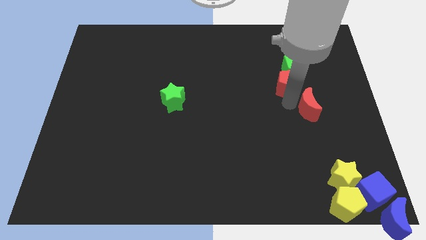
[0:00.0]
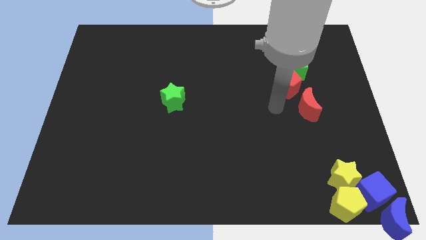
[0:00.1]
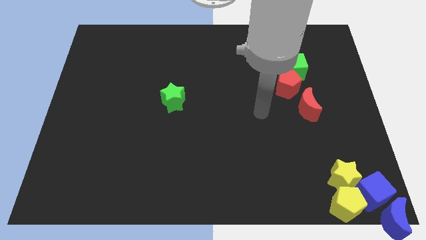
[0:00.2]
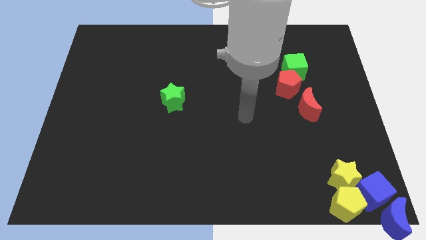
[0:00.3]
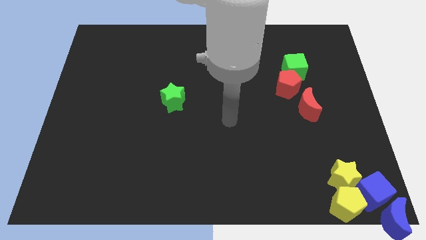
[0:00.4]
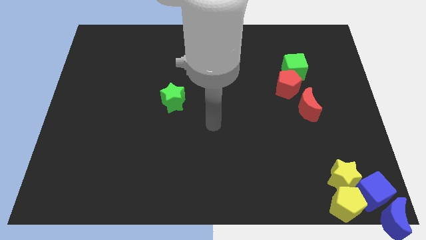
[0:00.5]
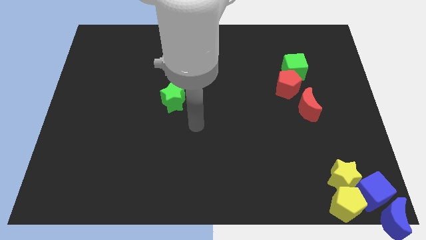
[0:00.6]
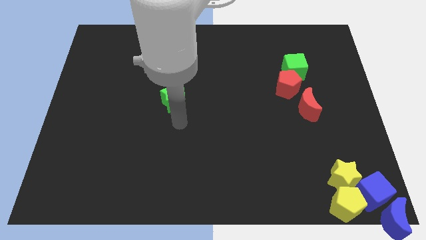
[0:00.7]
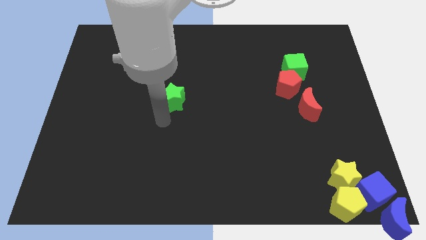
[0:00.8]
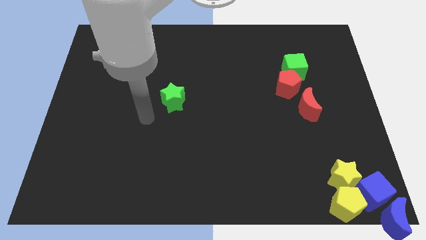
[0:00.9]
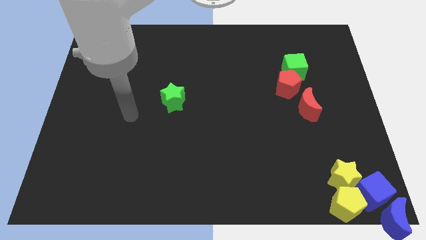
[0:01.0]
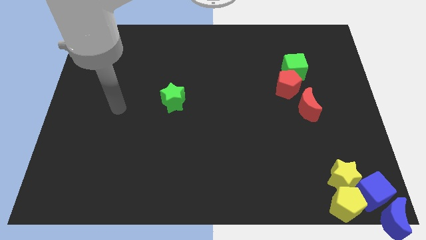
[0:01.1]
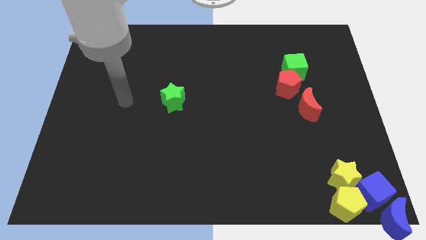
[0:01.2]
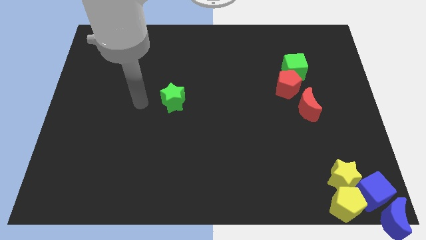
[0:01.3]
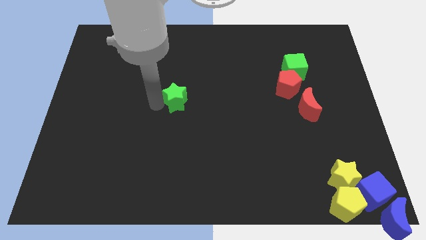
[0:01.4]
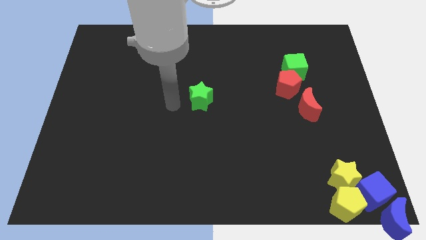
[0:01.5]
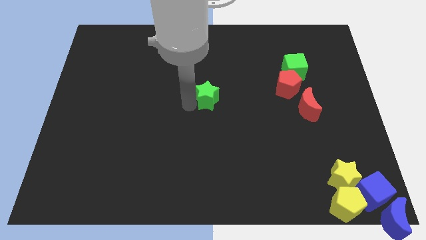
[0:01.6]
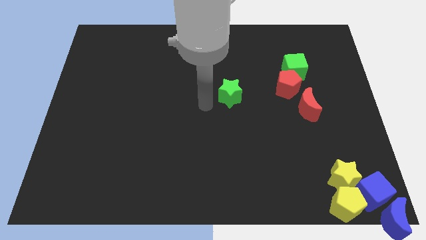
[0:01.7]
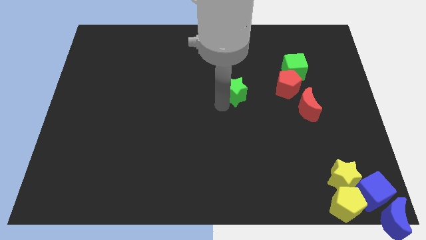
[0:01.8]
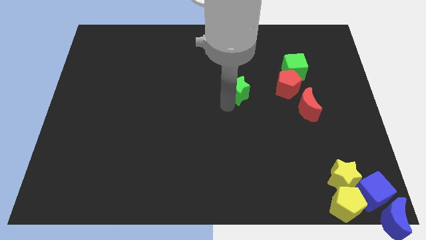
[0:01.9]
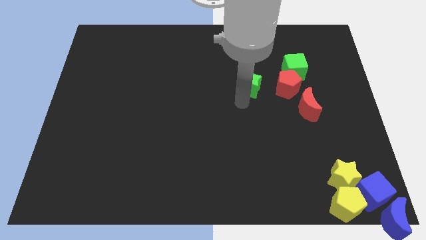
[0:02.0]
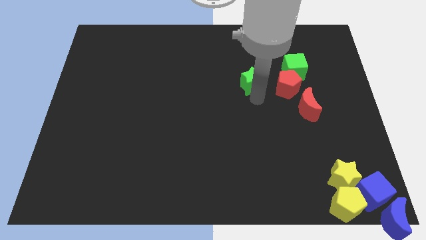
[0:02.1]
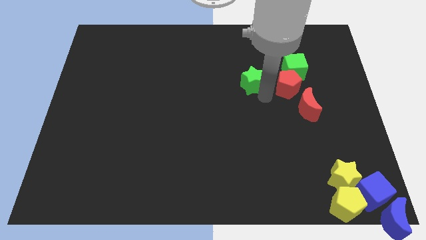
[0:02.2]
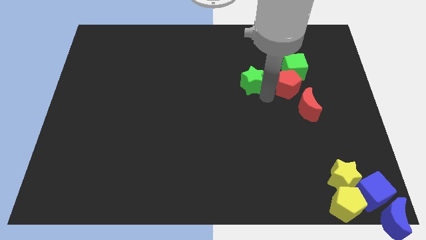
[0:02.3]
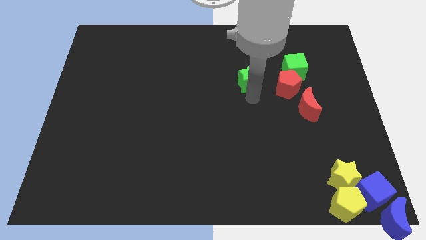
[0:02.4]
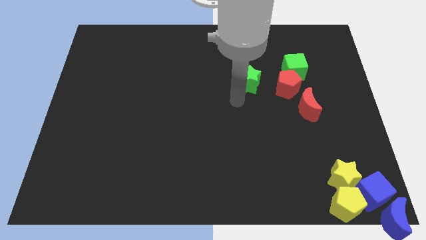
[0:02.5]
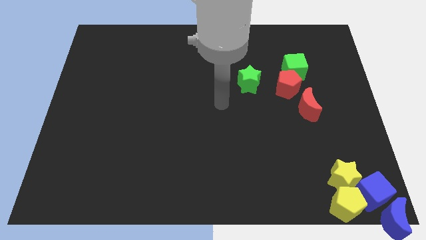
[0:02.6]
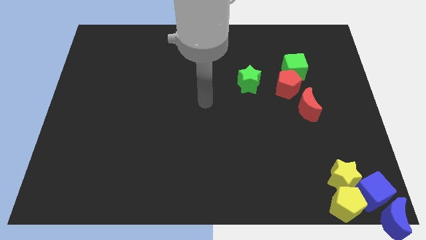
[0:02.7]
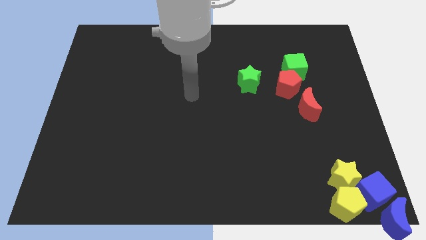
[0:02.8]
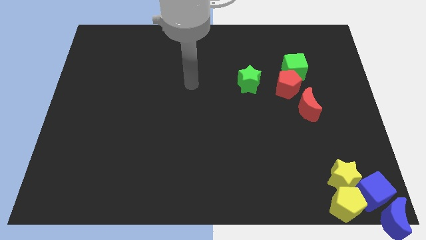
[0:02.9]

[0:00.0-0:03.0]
place the green star parallel to red pentagon

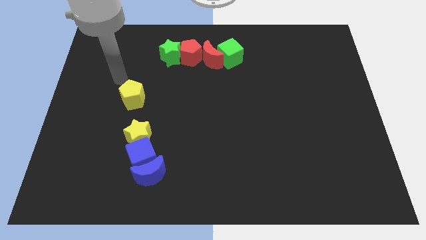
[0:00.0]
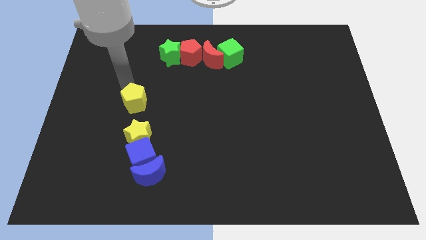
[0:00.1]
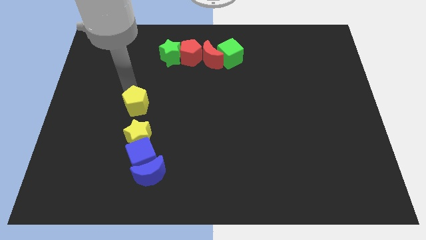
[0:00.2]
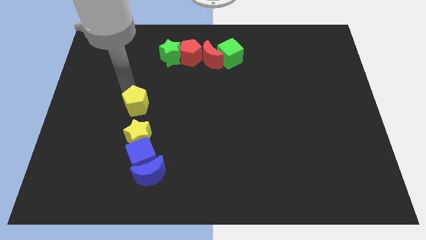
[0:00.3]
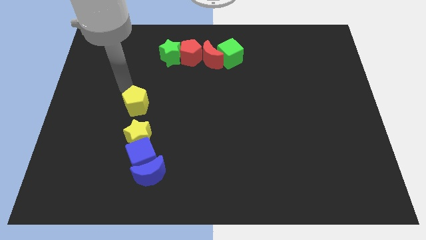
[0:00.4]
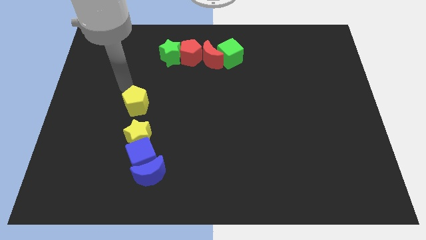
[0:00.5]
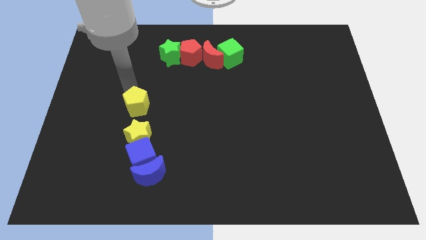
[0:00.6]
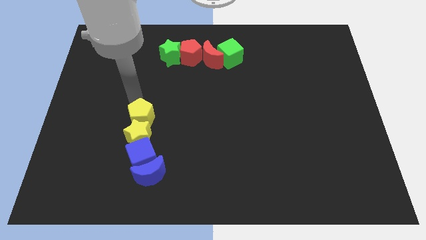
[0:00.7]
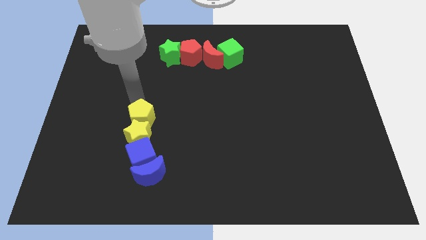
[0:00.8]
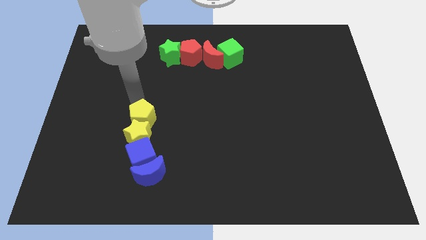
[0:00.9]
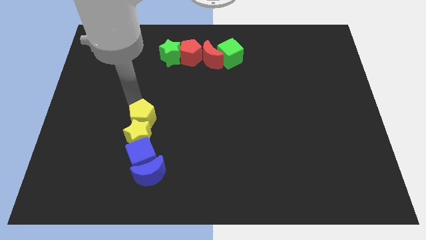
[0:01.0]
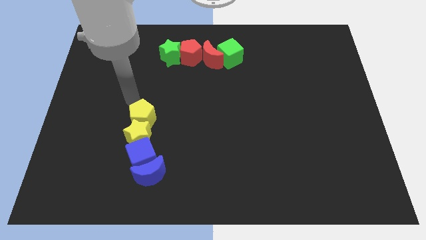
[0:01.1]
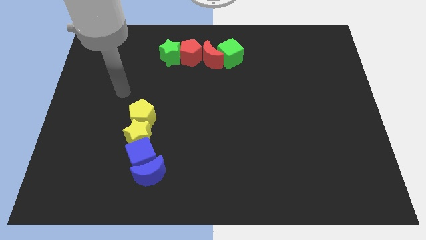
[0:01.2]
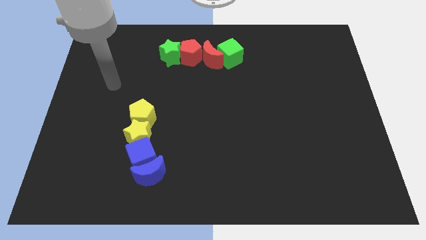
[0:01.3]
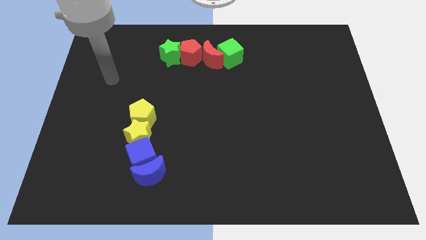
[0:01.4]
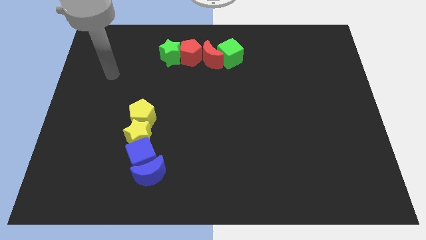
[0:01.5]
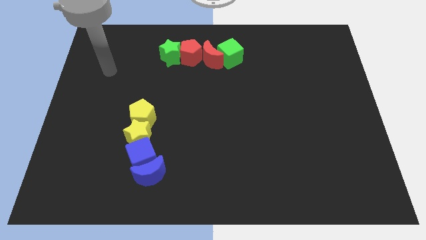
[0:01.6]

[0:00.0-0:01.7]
push the yellow pentagon at the top of the yellow star

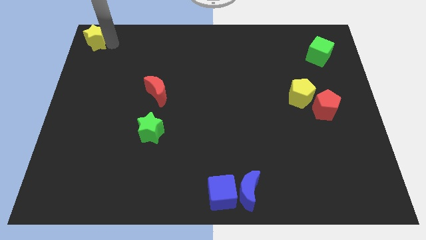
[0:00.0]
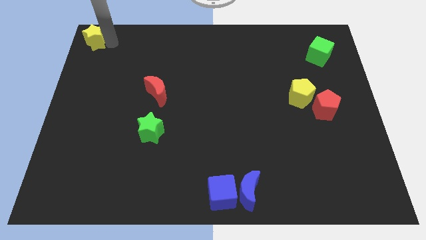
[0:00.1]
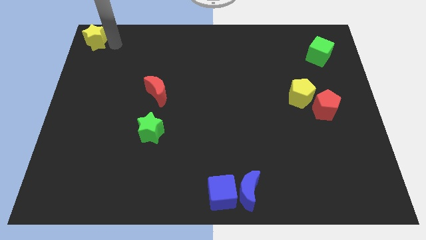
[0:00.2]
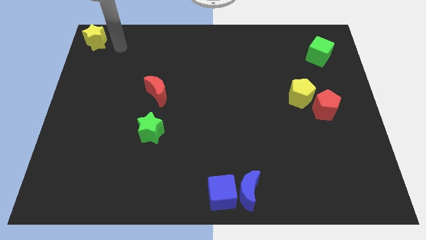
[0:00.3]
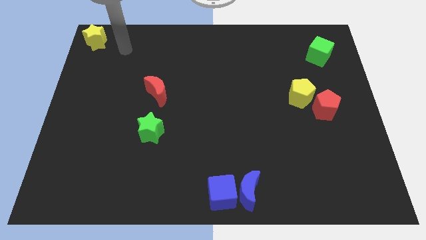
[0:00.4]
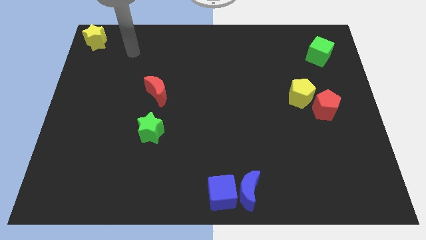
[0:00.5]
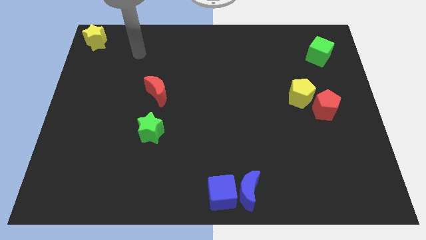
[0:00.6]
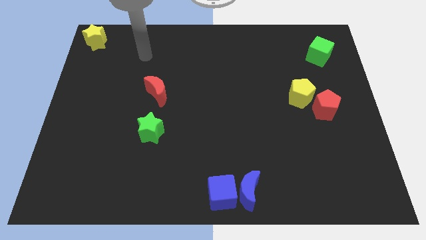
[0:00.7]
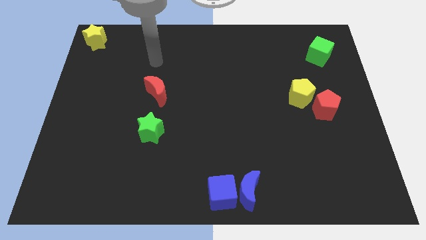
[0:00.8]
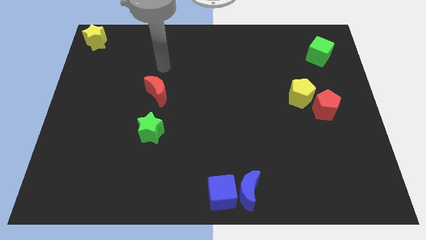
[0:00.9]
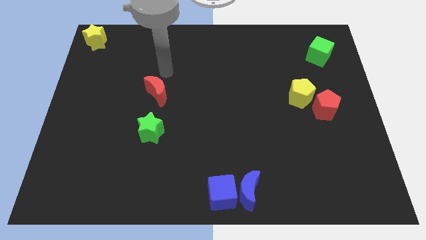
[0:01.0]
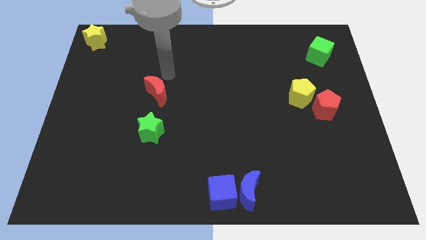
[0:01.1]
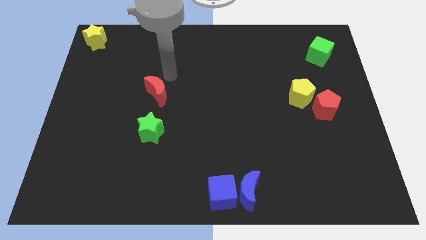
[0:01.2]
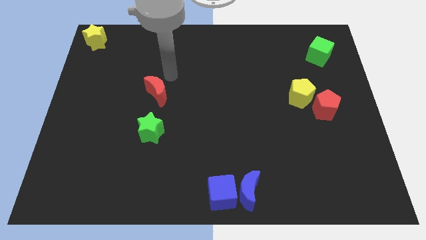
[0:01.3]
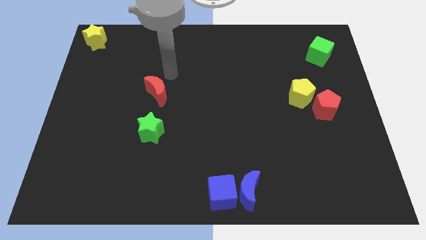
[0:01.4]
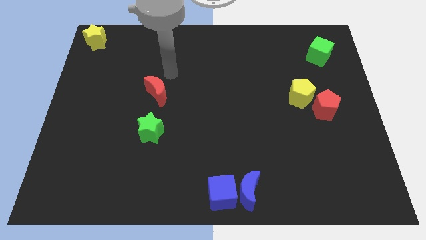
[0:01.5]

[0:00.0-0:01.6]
move your hand away from the yellow star

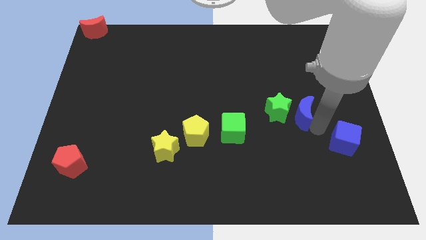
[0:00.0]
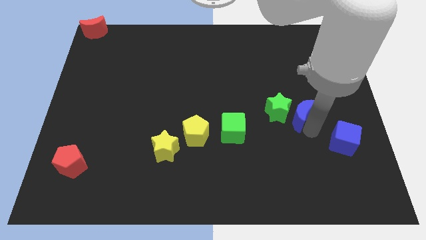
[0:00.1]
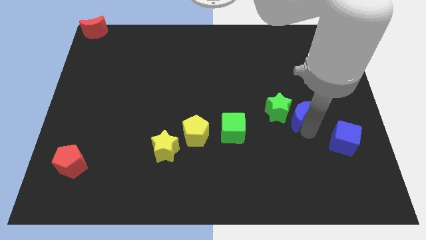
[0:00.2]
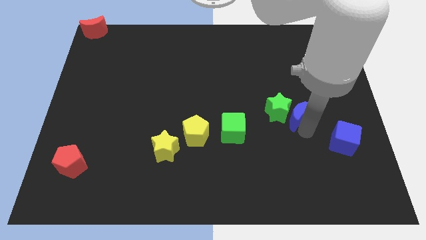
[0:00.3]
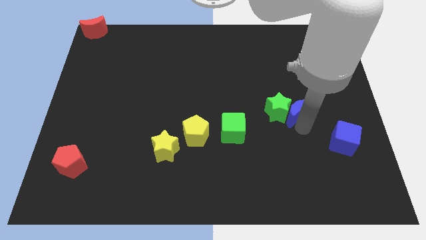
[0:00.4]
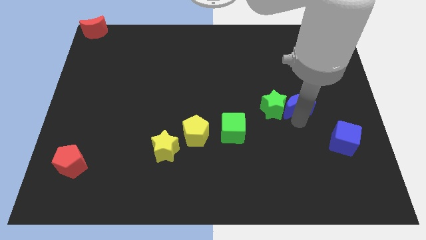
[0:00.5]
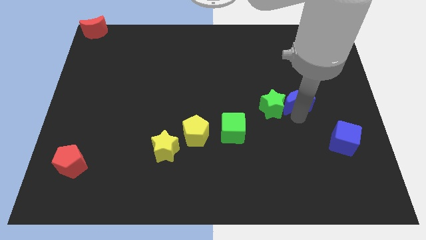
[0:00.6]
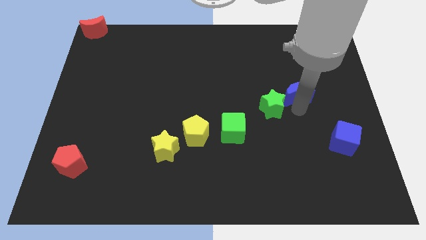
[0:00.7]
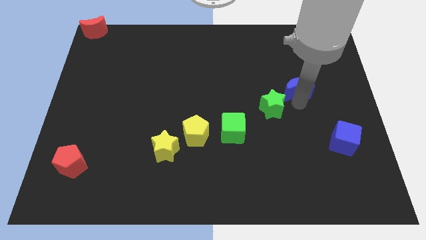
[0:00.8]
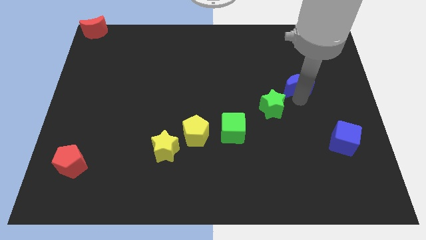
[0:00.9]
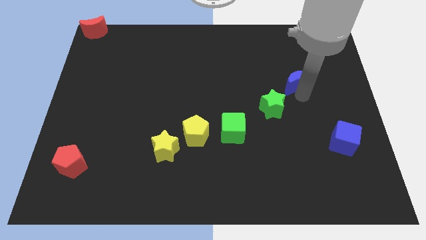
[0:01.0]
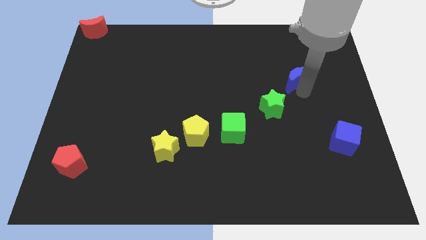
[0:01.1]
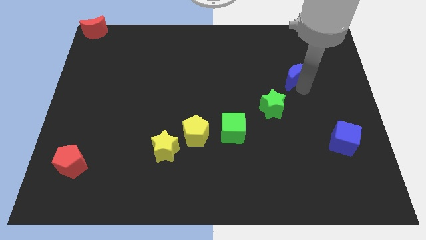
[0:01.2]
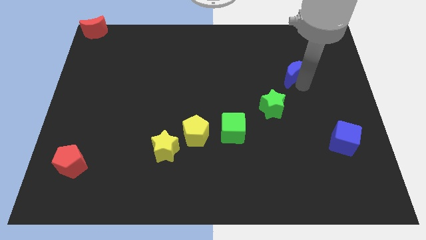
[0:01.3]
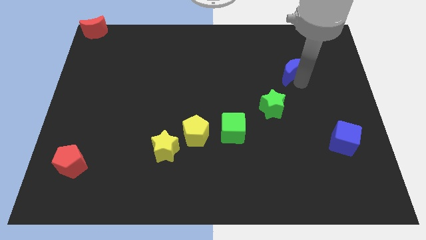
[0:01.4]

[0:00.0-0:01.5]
put the blue moon diagonally top right to the green star

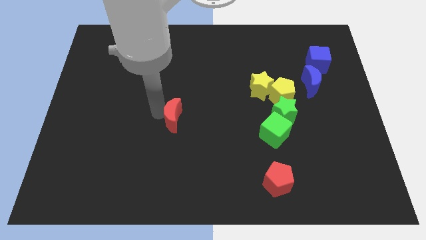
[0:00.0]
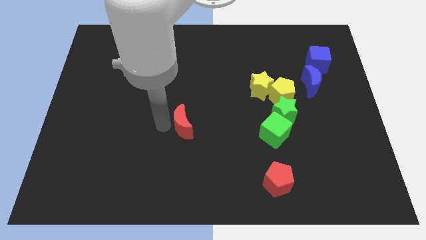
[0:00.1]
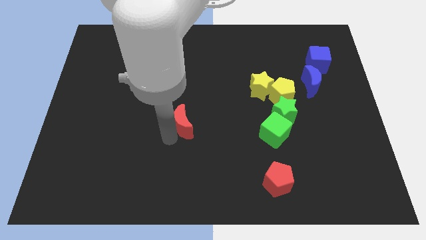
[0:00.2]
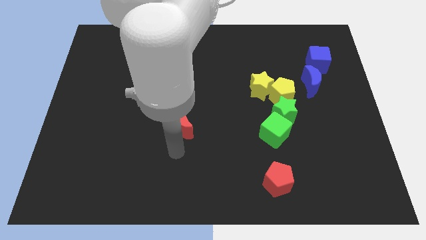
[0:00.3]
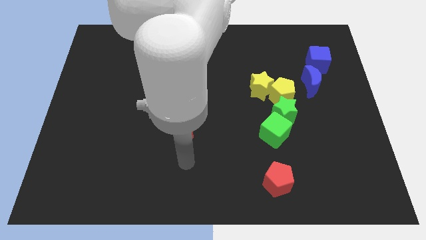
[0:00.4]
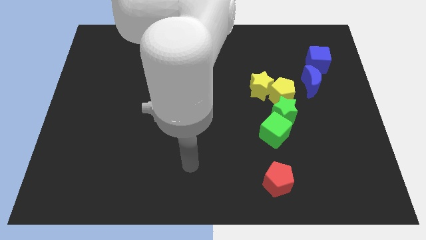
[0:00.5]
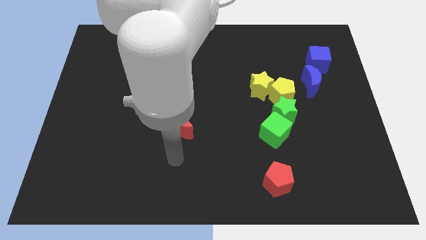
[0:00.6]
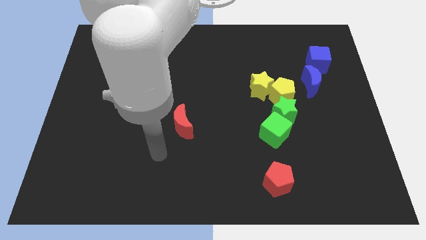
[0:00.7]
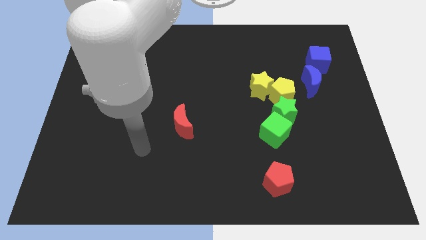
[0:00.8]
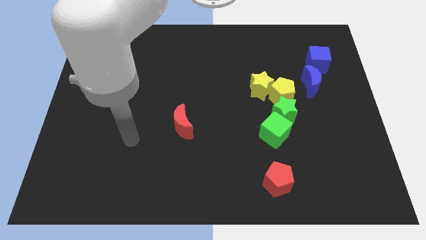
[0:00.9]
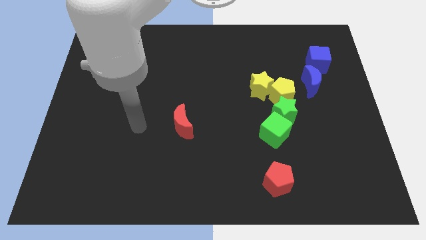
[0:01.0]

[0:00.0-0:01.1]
slightly push the red crescent to the right

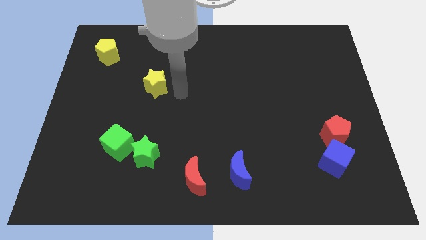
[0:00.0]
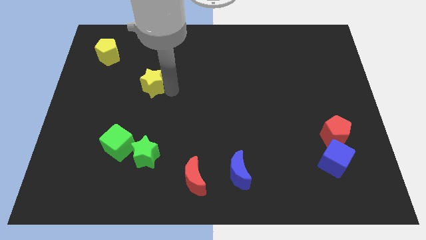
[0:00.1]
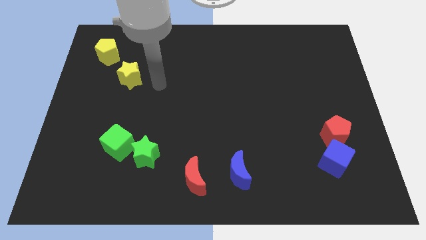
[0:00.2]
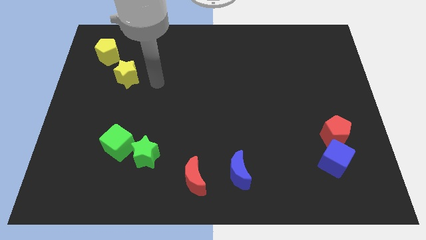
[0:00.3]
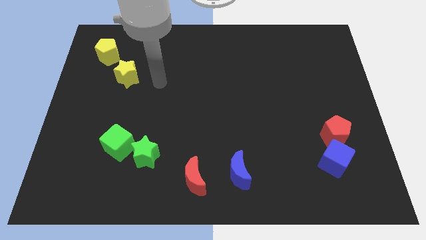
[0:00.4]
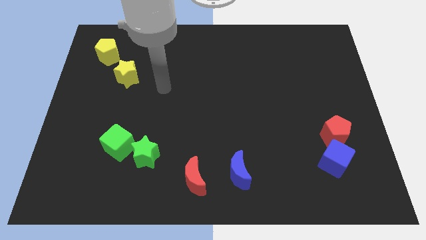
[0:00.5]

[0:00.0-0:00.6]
push the yellow star to the bottom right of the yellow pentagon
